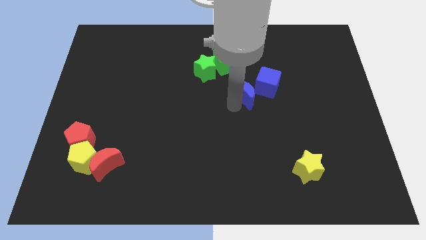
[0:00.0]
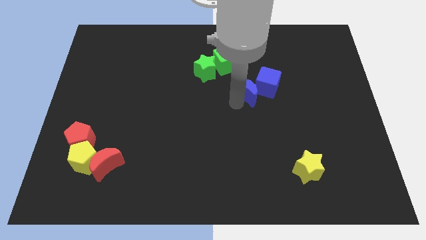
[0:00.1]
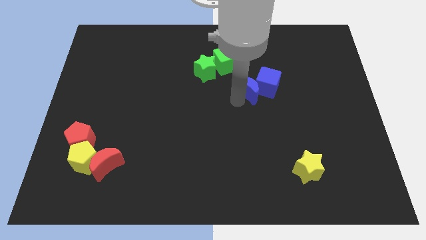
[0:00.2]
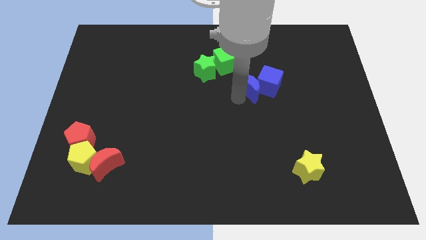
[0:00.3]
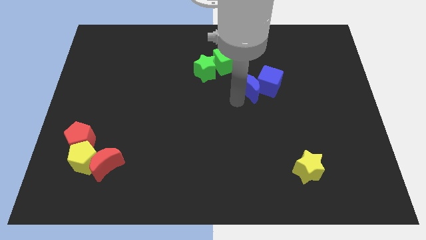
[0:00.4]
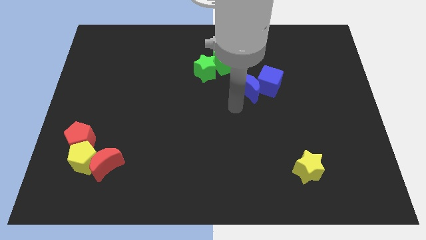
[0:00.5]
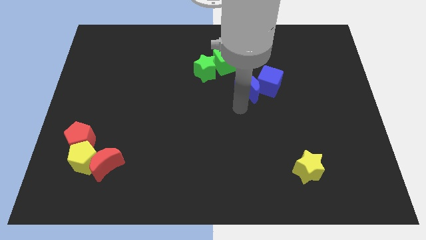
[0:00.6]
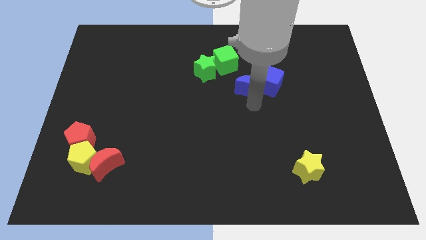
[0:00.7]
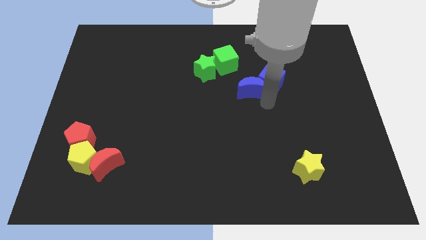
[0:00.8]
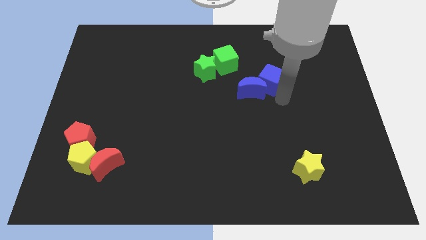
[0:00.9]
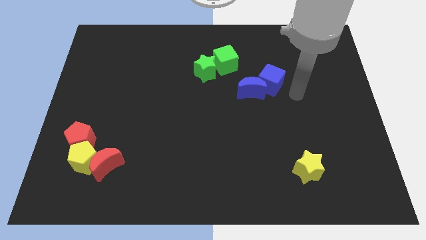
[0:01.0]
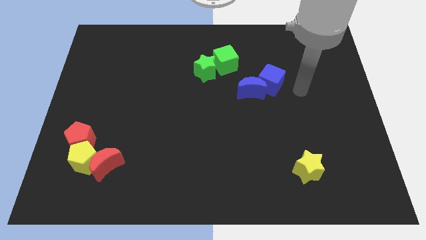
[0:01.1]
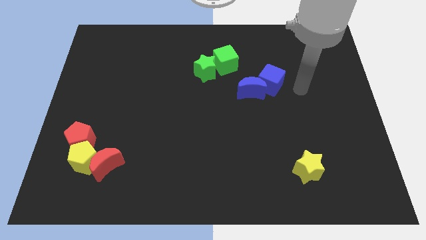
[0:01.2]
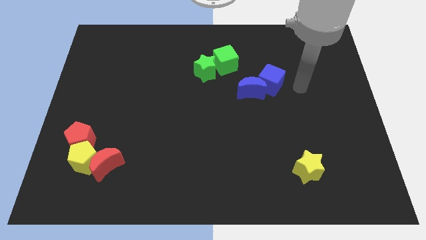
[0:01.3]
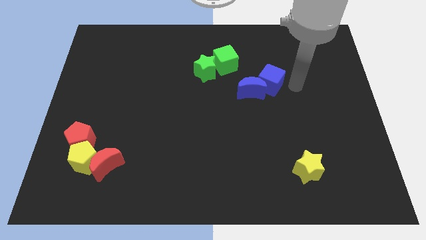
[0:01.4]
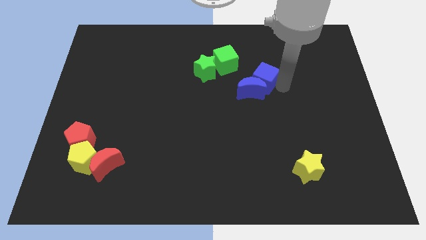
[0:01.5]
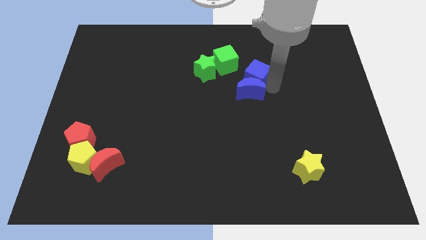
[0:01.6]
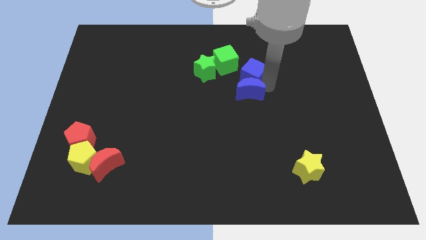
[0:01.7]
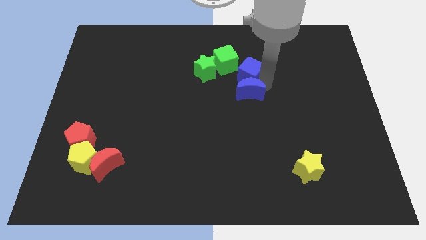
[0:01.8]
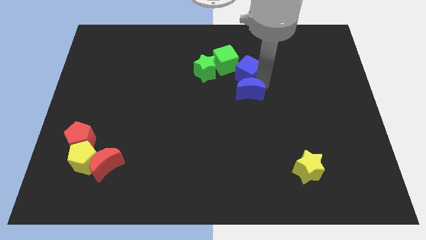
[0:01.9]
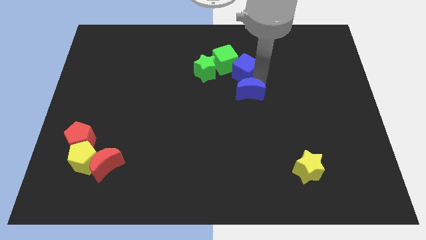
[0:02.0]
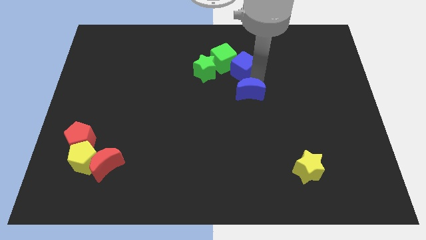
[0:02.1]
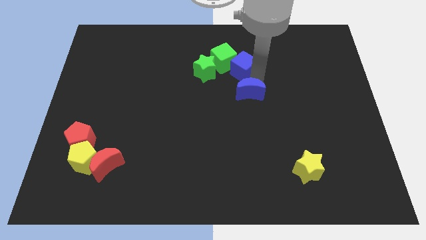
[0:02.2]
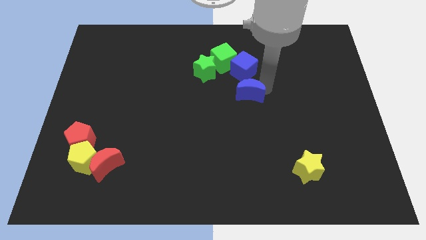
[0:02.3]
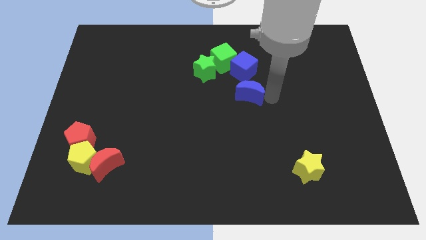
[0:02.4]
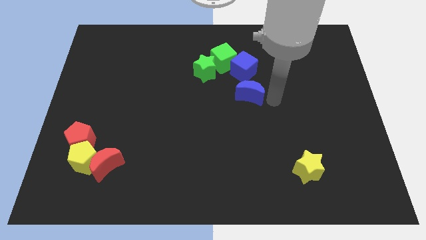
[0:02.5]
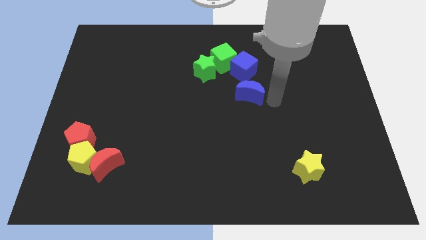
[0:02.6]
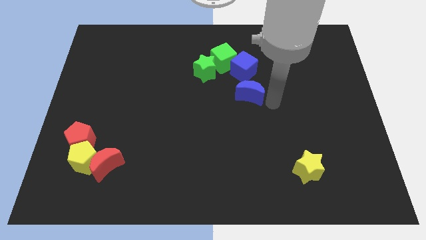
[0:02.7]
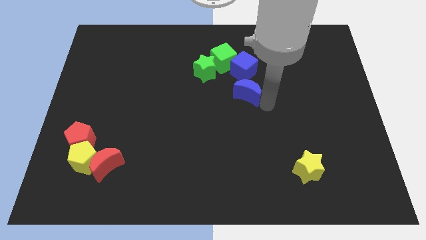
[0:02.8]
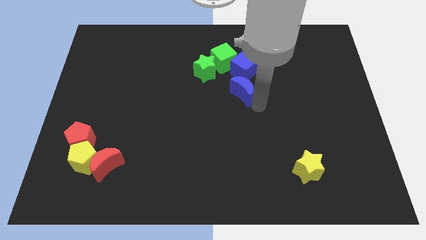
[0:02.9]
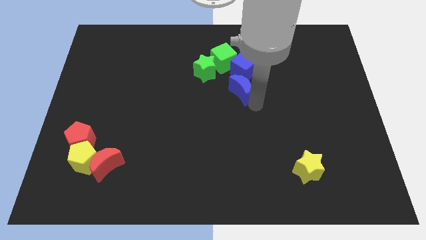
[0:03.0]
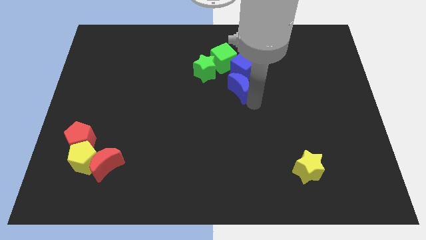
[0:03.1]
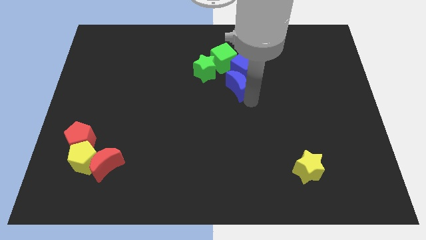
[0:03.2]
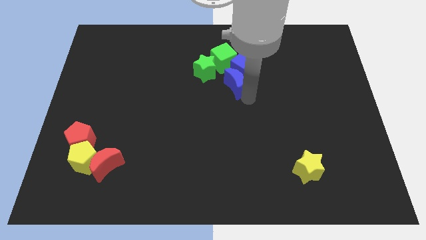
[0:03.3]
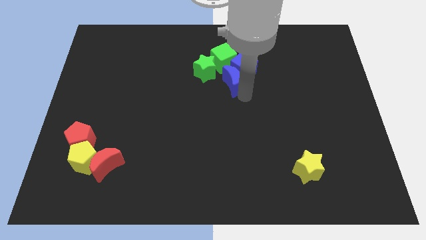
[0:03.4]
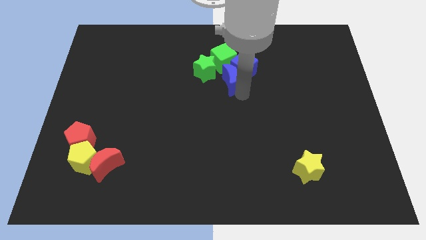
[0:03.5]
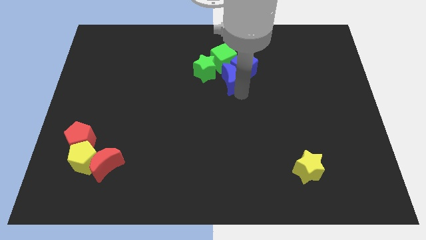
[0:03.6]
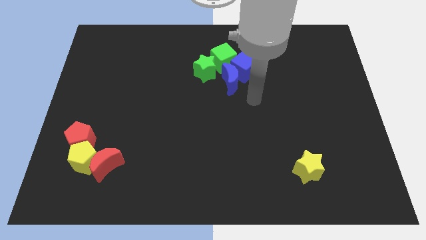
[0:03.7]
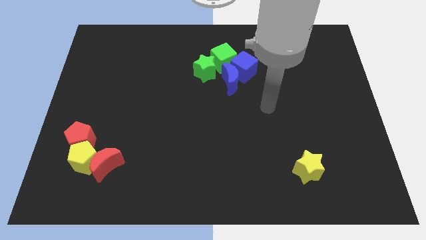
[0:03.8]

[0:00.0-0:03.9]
move the blue blocks near to green blocks

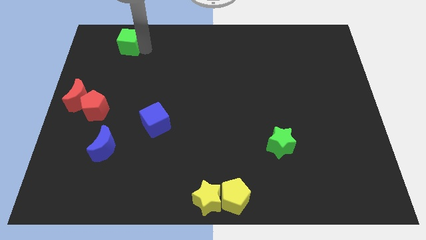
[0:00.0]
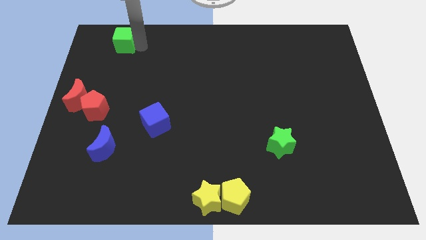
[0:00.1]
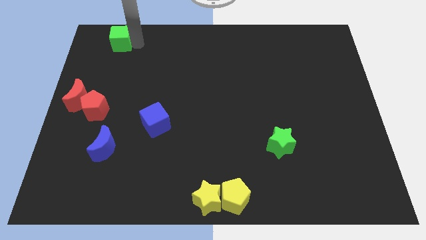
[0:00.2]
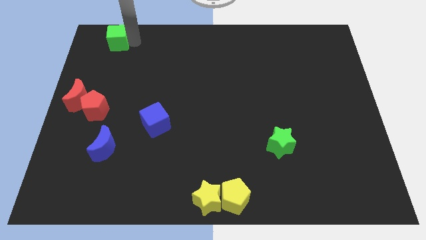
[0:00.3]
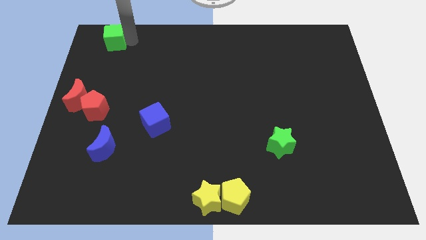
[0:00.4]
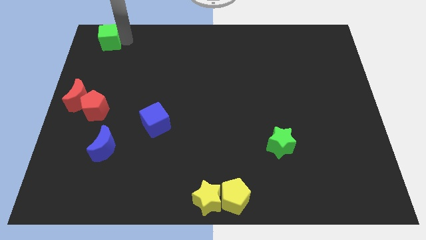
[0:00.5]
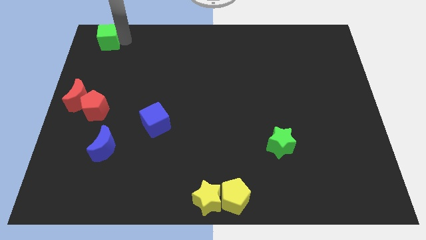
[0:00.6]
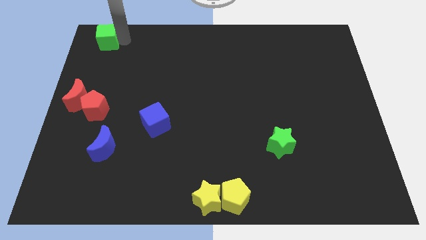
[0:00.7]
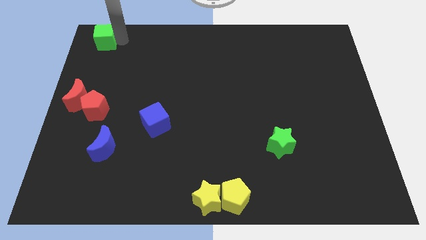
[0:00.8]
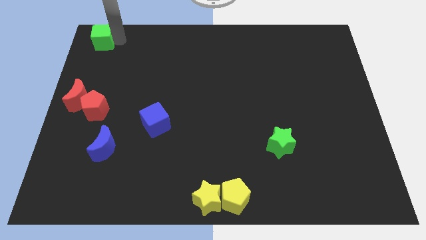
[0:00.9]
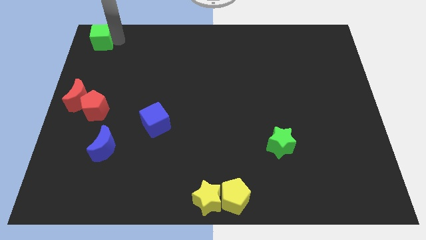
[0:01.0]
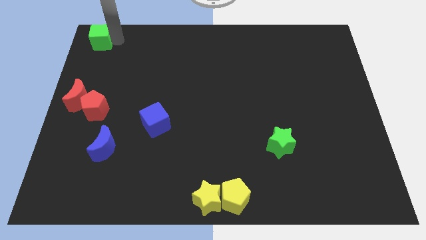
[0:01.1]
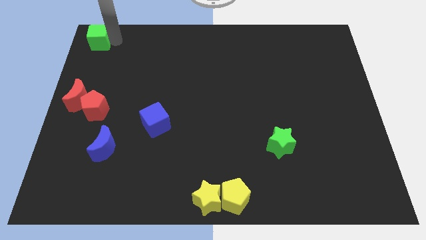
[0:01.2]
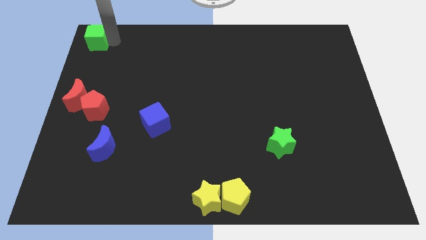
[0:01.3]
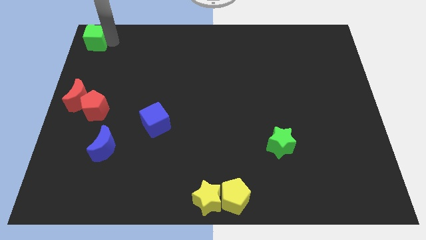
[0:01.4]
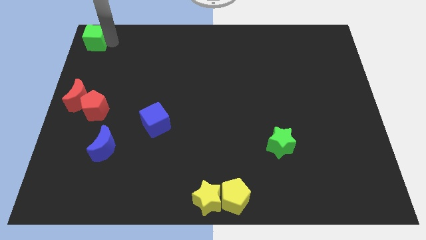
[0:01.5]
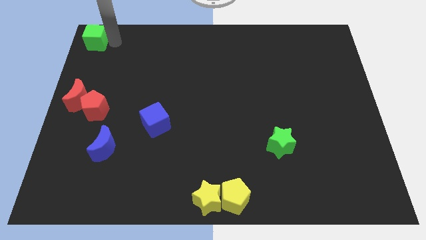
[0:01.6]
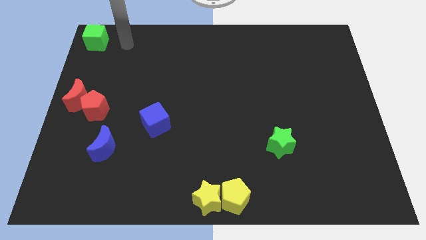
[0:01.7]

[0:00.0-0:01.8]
place the green cube towards the top left corner of the board

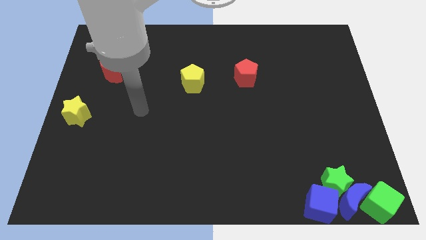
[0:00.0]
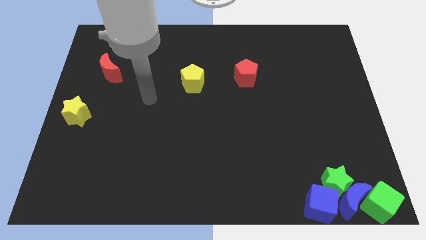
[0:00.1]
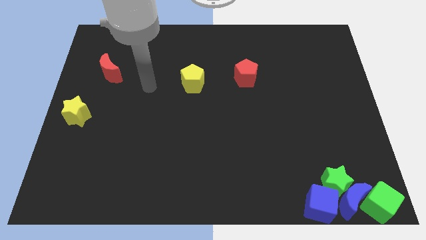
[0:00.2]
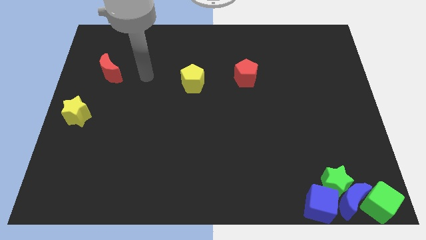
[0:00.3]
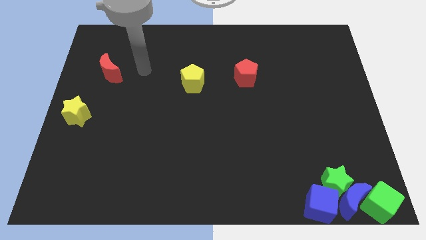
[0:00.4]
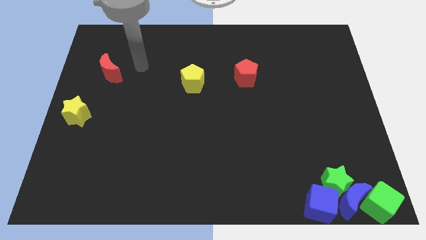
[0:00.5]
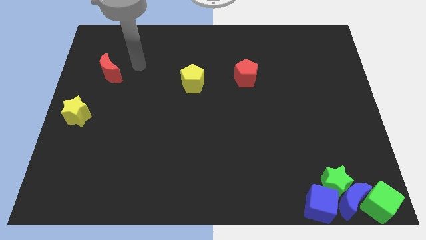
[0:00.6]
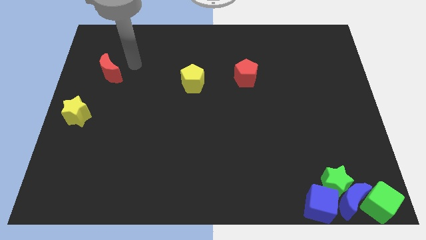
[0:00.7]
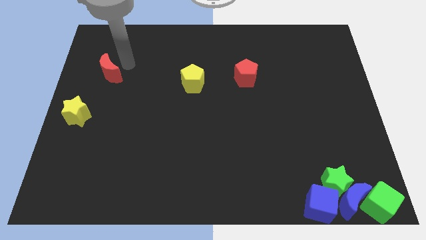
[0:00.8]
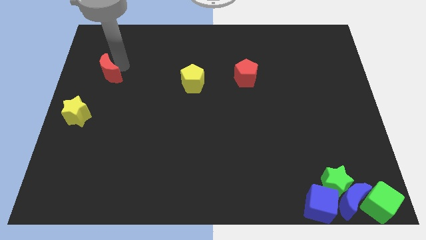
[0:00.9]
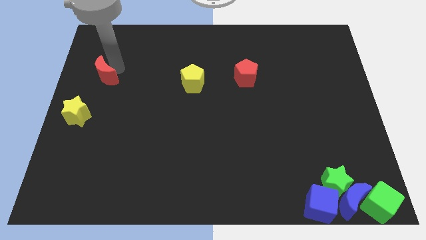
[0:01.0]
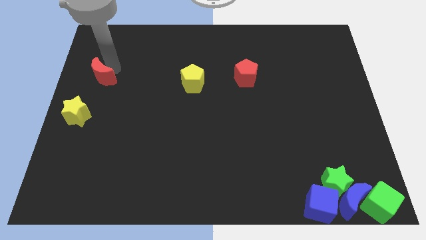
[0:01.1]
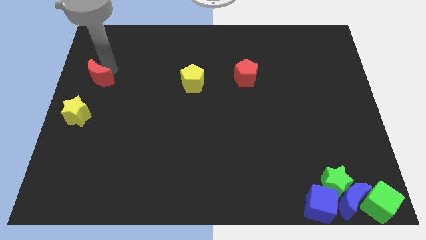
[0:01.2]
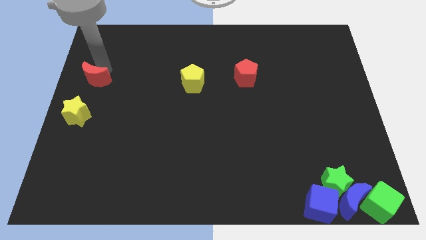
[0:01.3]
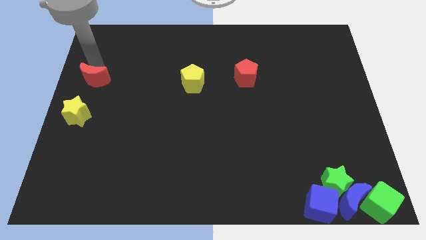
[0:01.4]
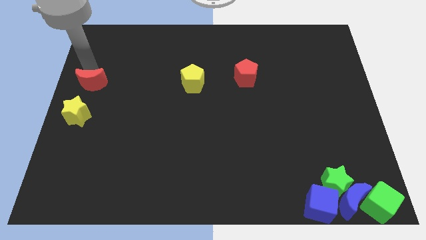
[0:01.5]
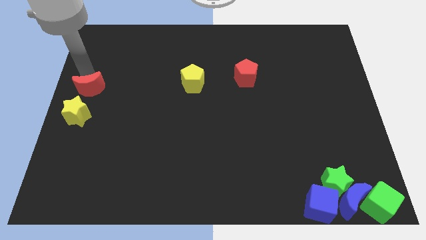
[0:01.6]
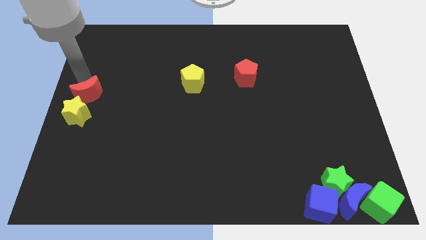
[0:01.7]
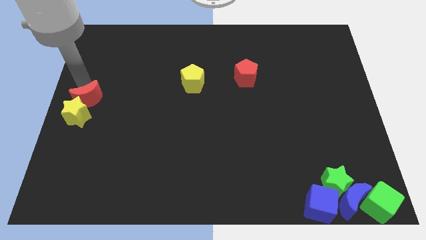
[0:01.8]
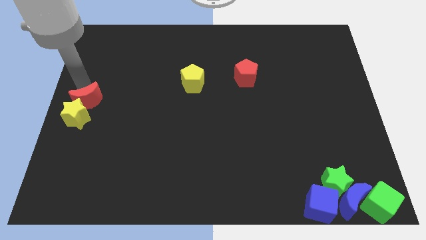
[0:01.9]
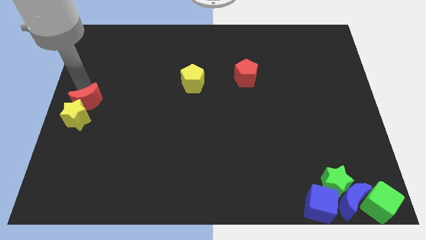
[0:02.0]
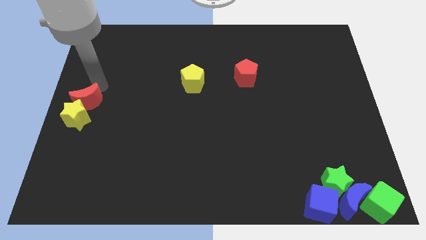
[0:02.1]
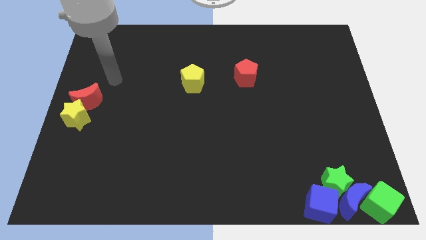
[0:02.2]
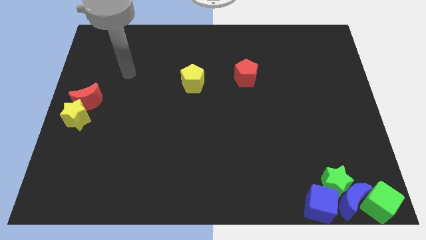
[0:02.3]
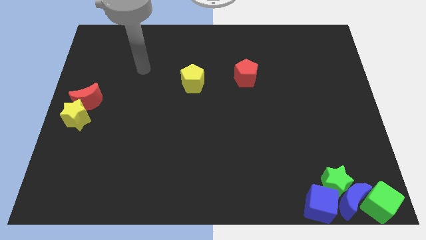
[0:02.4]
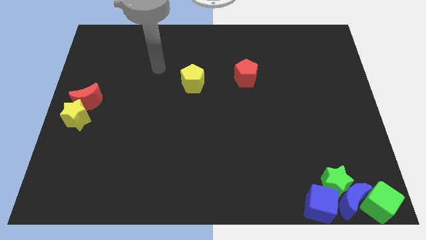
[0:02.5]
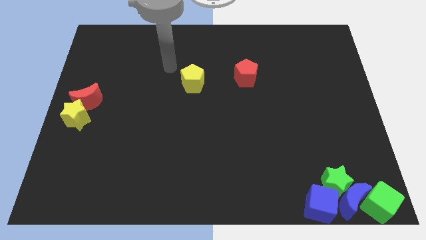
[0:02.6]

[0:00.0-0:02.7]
place the red crescent to the center left side of the board

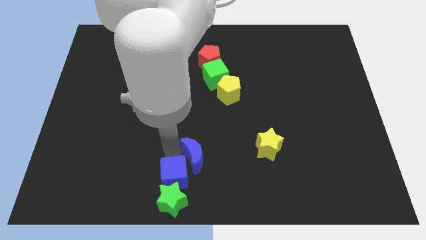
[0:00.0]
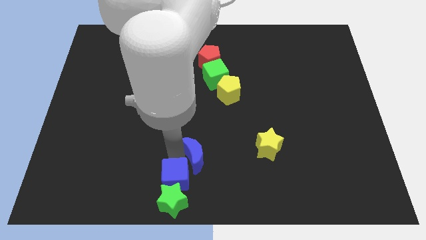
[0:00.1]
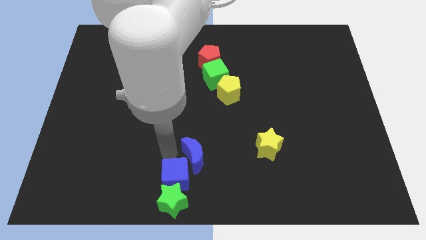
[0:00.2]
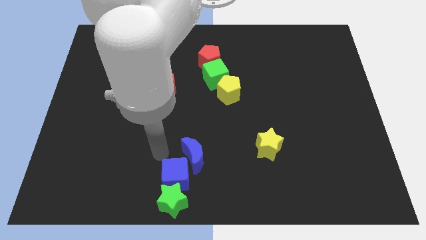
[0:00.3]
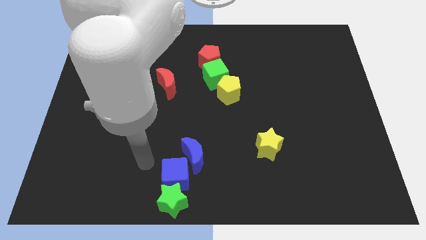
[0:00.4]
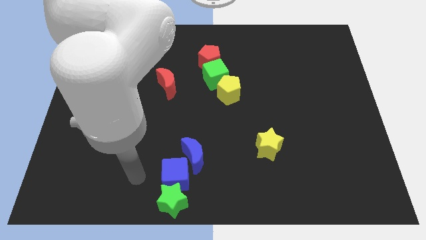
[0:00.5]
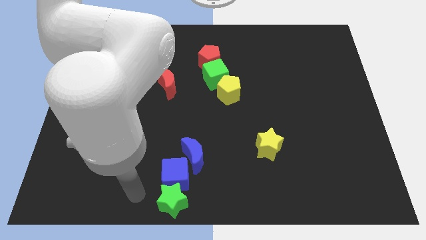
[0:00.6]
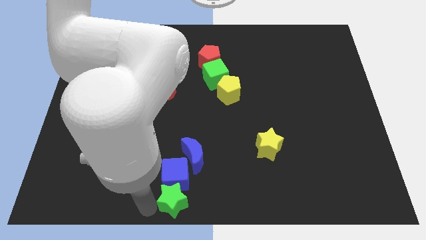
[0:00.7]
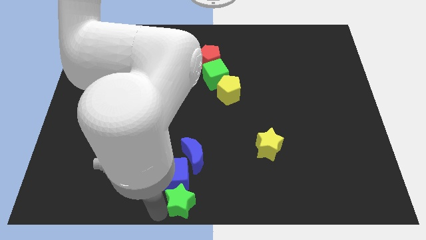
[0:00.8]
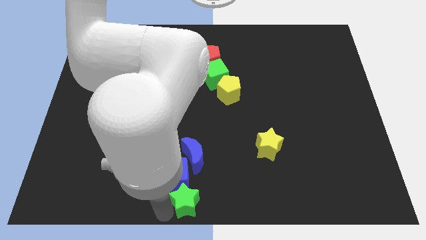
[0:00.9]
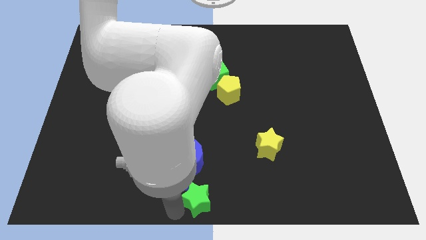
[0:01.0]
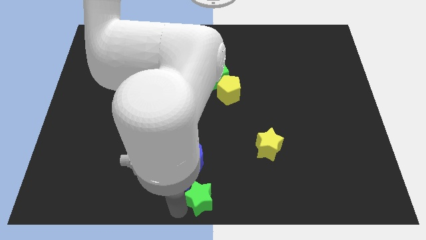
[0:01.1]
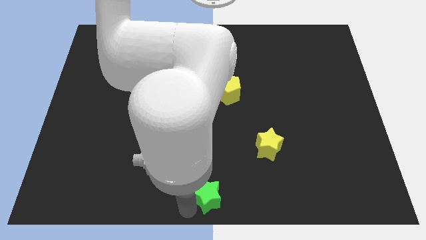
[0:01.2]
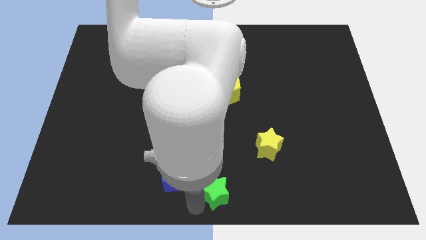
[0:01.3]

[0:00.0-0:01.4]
separate the green star away from the blue cube
